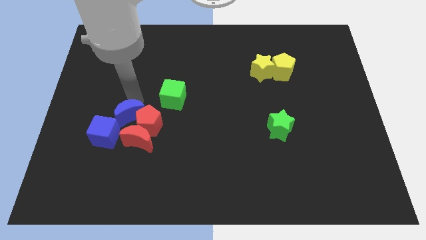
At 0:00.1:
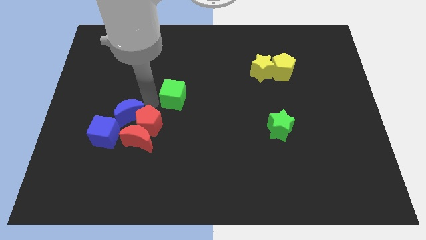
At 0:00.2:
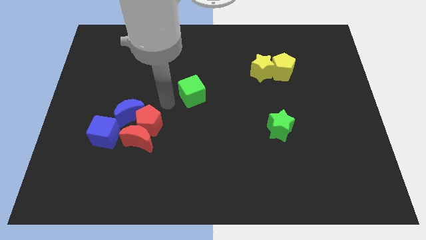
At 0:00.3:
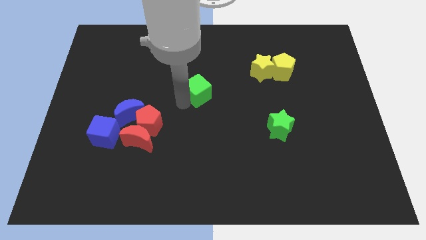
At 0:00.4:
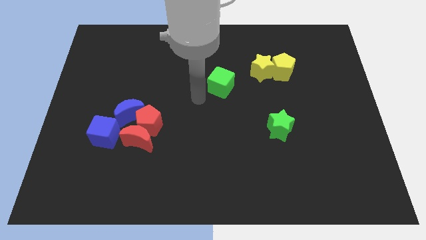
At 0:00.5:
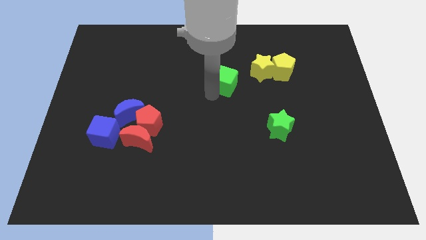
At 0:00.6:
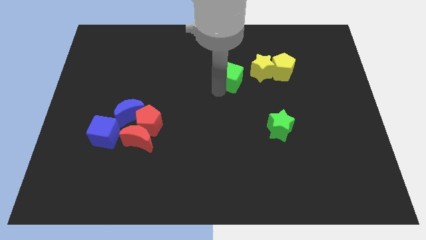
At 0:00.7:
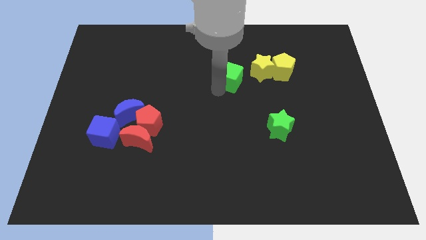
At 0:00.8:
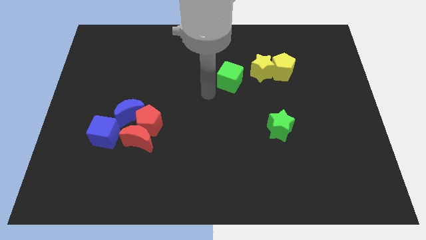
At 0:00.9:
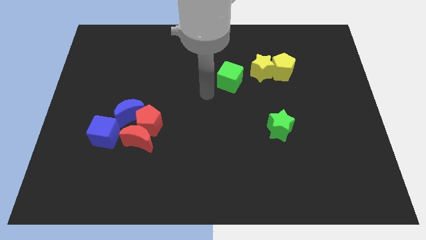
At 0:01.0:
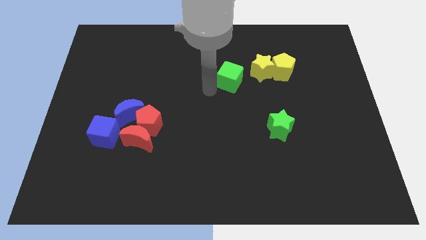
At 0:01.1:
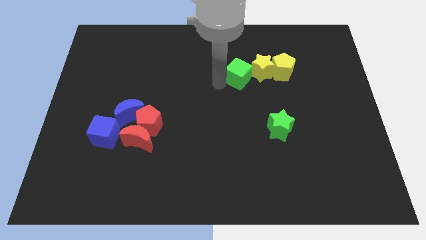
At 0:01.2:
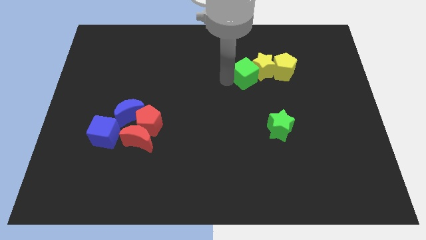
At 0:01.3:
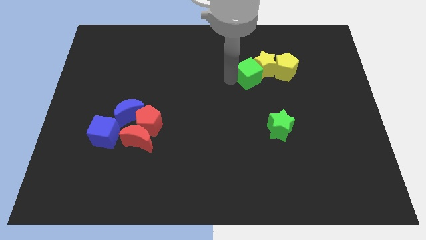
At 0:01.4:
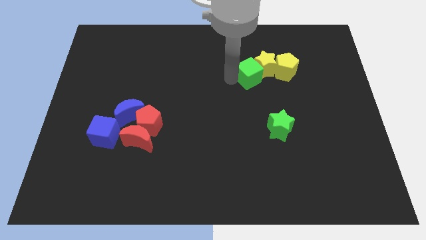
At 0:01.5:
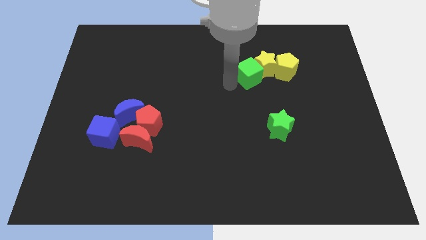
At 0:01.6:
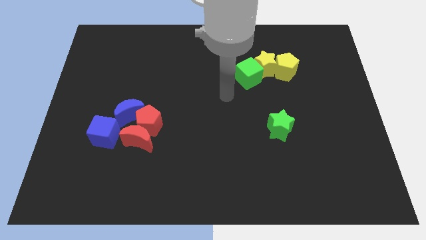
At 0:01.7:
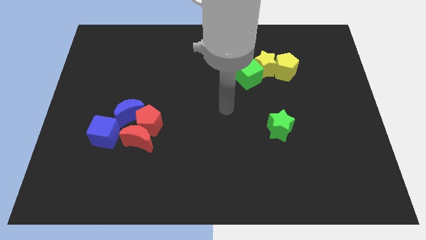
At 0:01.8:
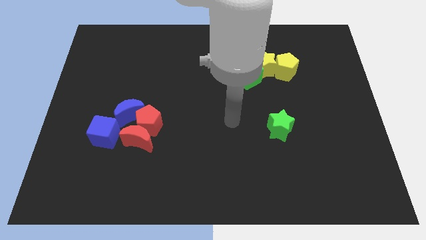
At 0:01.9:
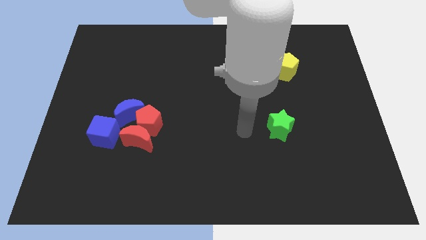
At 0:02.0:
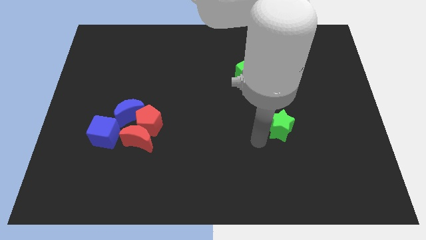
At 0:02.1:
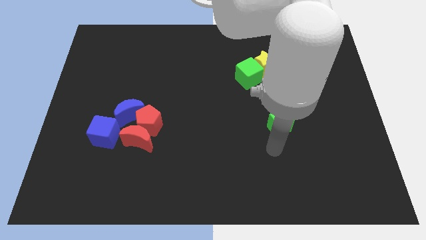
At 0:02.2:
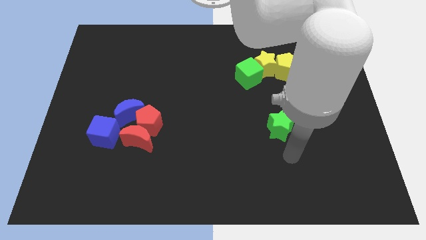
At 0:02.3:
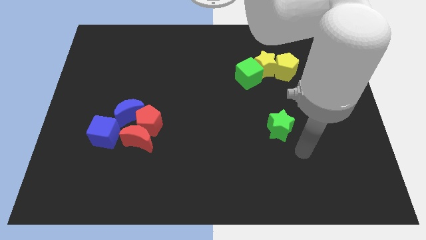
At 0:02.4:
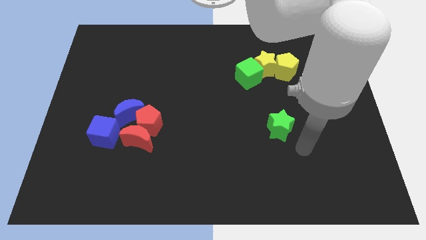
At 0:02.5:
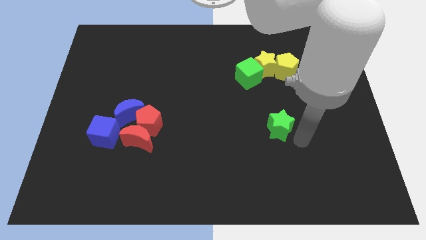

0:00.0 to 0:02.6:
push the green cube into the yellow star

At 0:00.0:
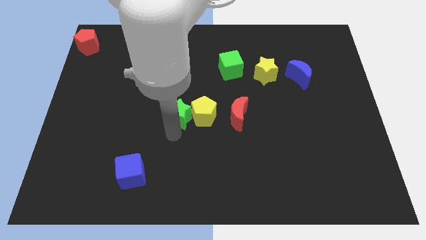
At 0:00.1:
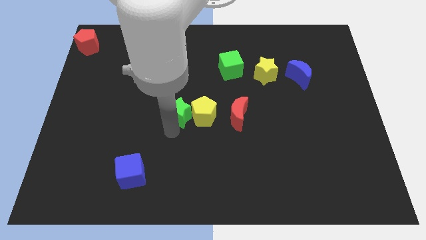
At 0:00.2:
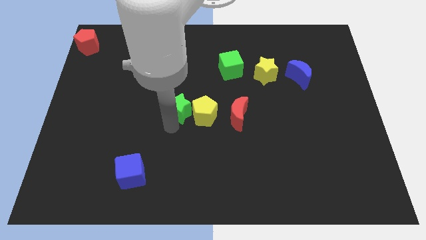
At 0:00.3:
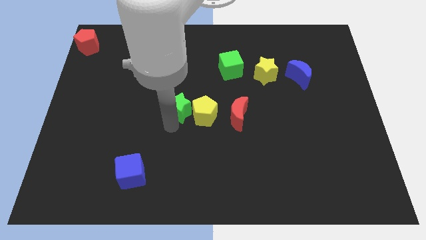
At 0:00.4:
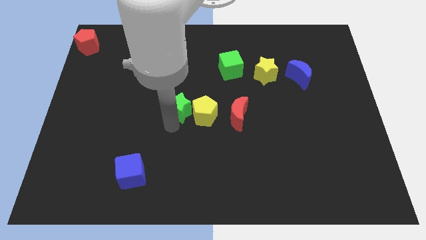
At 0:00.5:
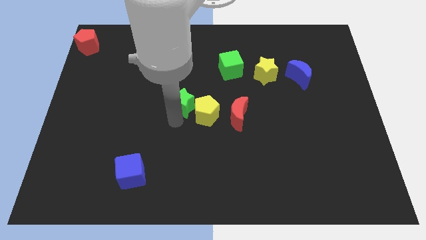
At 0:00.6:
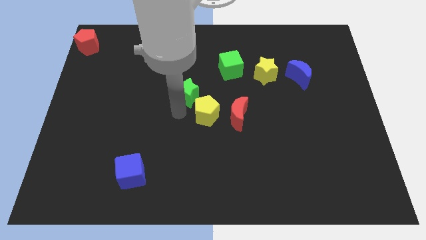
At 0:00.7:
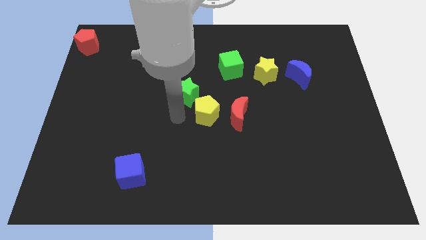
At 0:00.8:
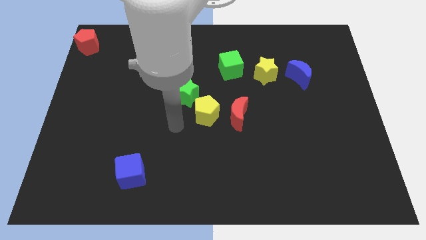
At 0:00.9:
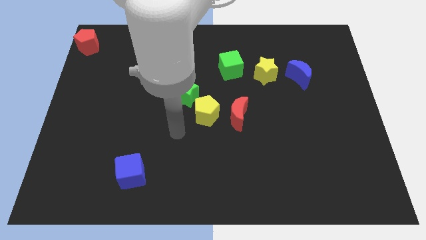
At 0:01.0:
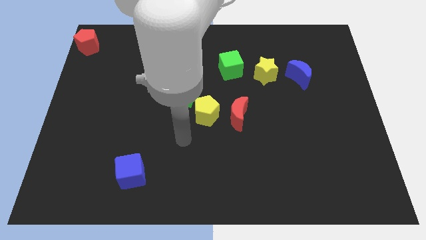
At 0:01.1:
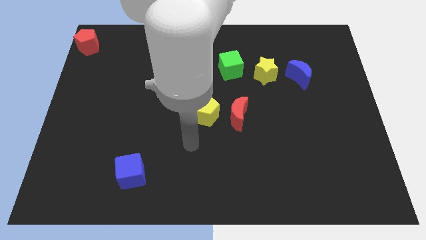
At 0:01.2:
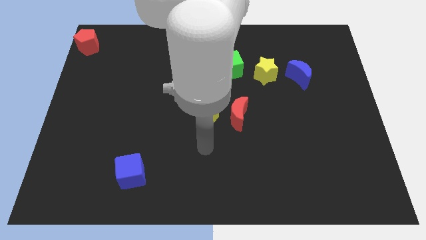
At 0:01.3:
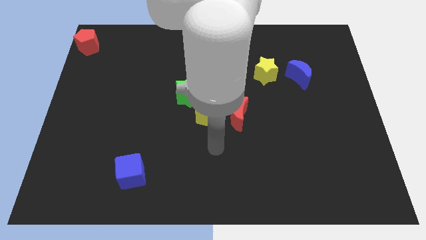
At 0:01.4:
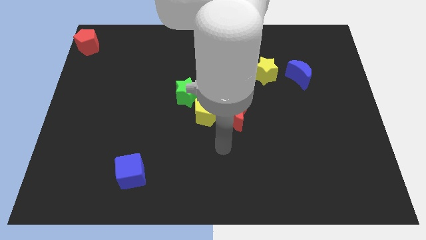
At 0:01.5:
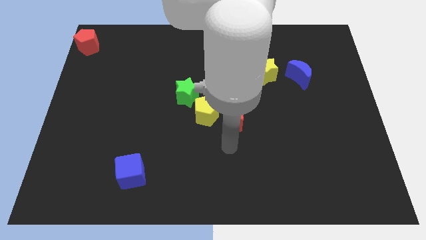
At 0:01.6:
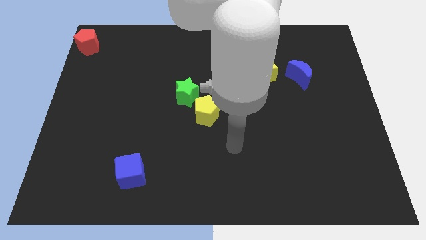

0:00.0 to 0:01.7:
push the green star slightly to the top

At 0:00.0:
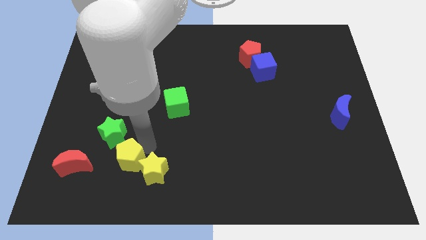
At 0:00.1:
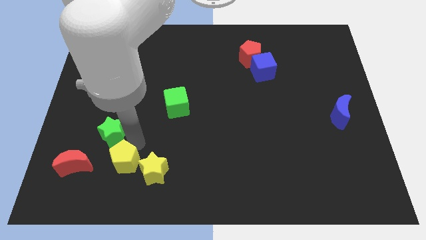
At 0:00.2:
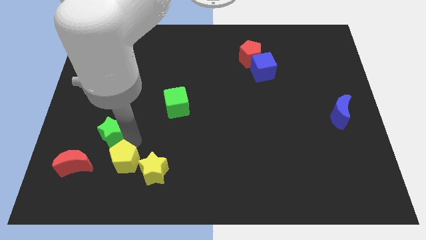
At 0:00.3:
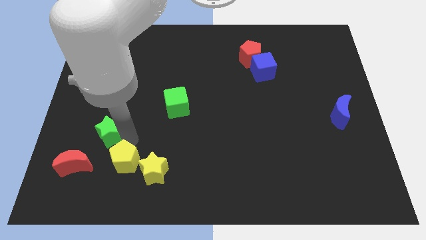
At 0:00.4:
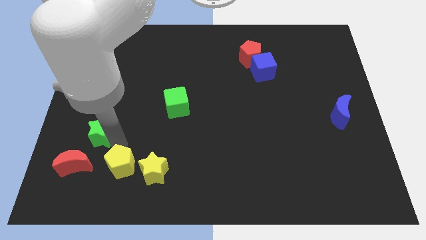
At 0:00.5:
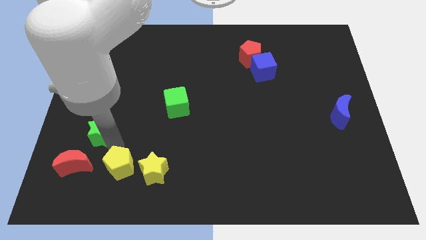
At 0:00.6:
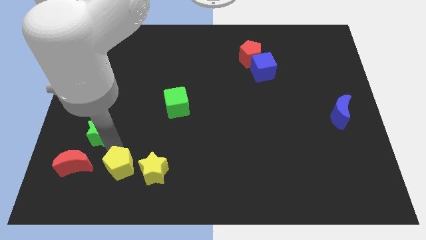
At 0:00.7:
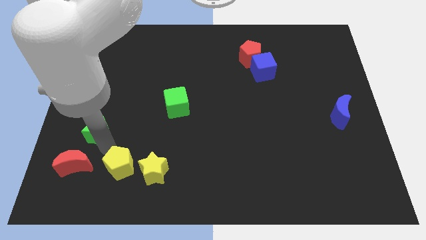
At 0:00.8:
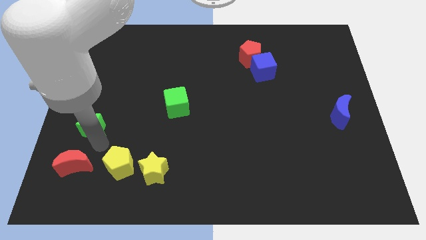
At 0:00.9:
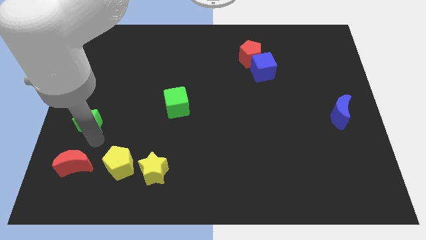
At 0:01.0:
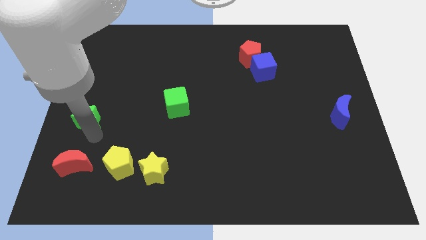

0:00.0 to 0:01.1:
place the green star above the red moon

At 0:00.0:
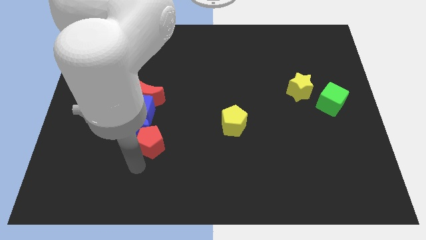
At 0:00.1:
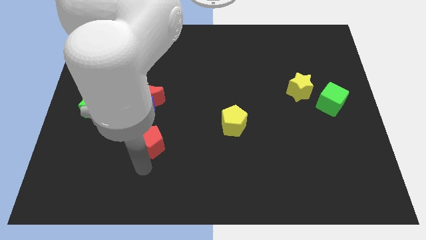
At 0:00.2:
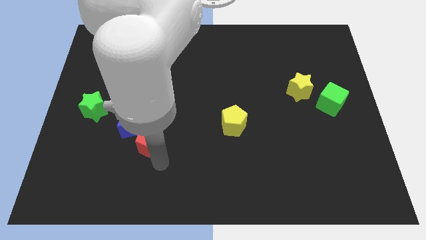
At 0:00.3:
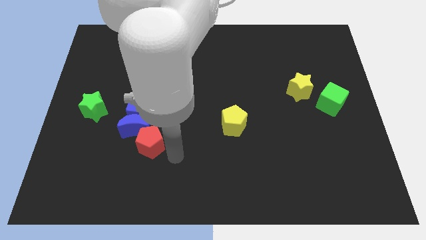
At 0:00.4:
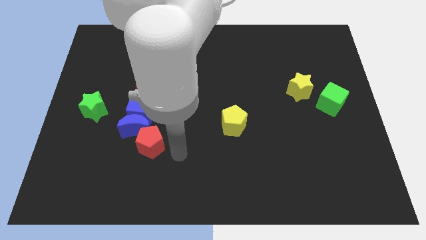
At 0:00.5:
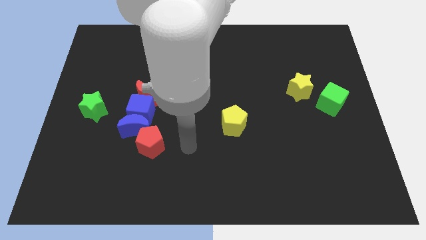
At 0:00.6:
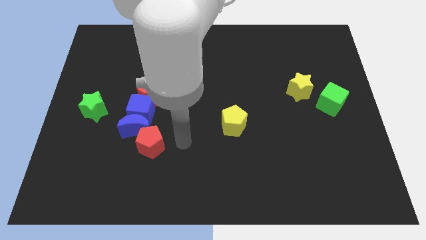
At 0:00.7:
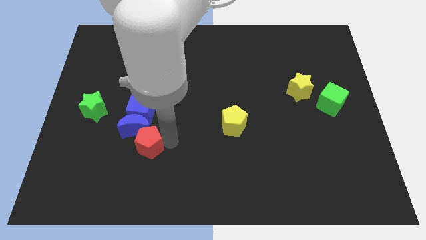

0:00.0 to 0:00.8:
move your arm to the right of the red pentagon

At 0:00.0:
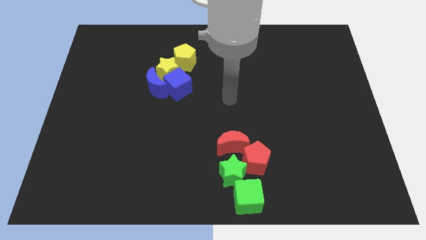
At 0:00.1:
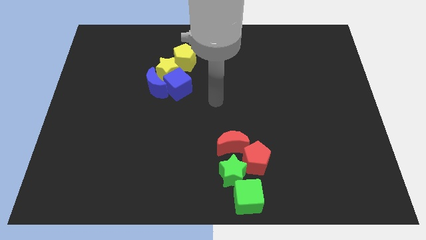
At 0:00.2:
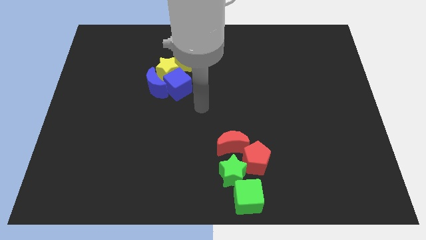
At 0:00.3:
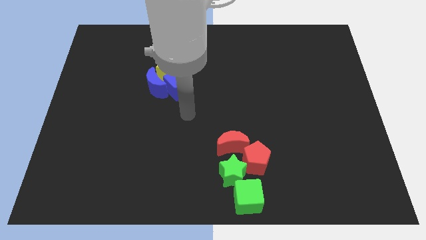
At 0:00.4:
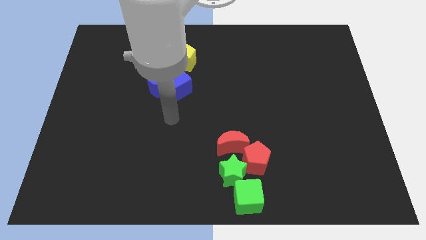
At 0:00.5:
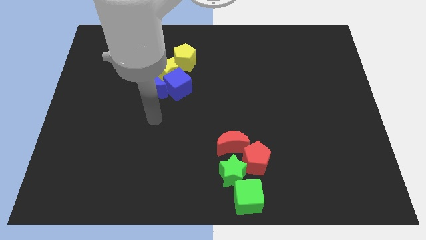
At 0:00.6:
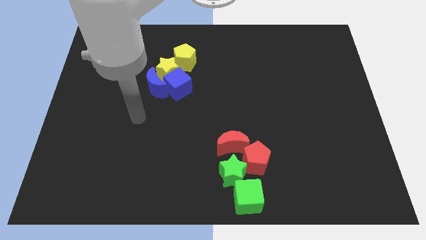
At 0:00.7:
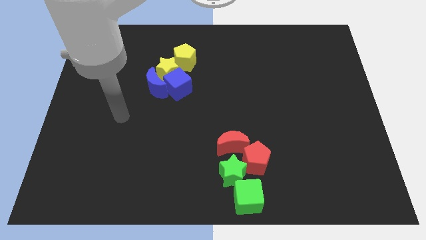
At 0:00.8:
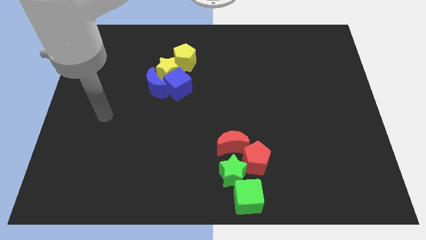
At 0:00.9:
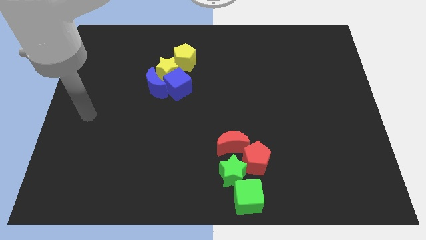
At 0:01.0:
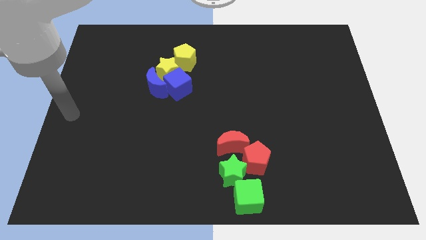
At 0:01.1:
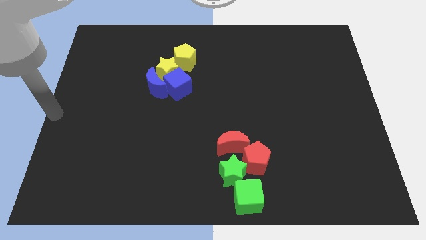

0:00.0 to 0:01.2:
place your hand at left center of the board

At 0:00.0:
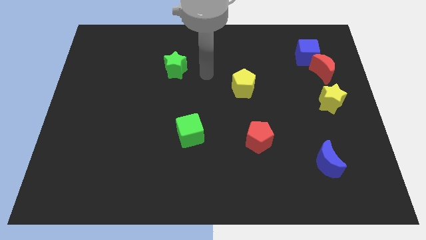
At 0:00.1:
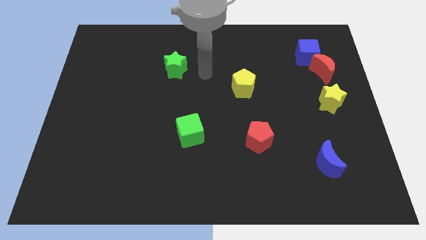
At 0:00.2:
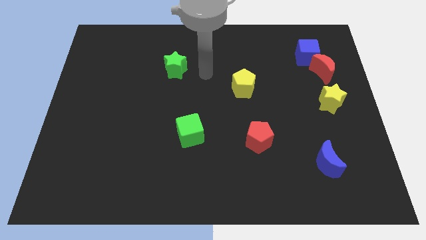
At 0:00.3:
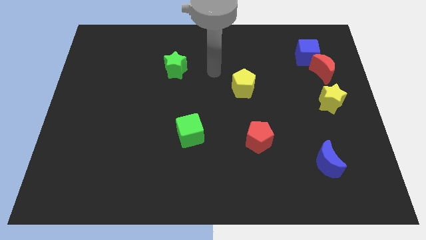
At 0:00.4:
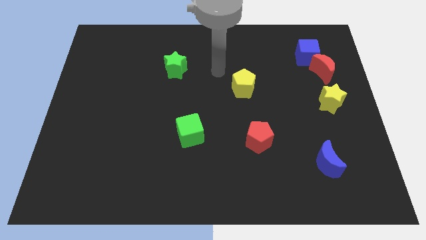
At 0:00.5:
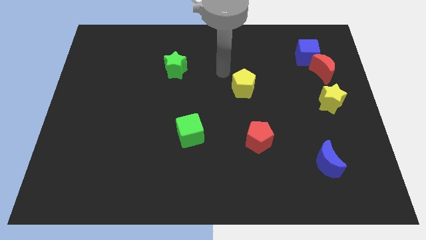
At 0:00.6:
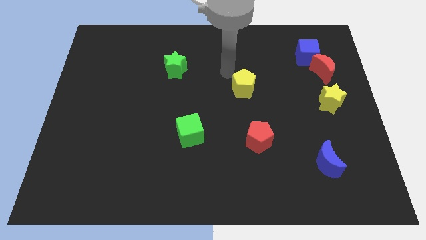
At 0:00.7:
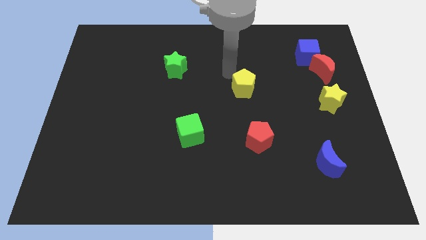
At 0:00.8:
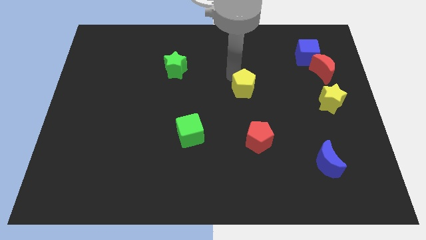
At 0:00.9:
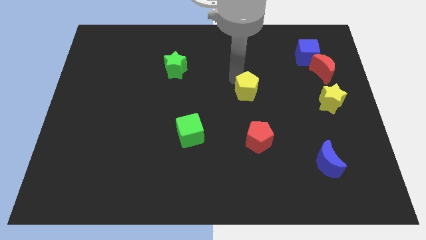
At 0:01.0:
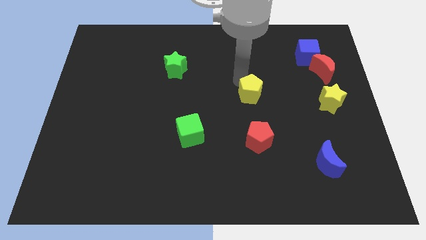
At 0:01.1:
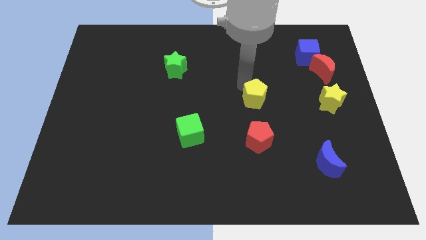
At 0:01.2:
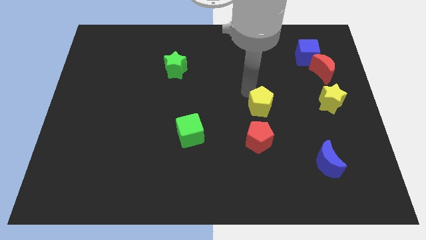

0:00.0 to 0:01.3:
move the yellow pentagon above the red pentagon

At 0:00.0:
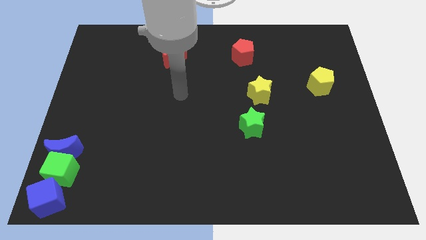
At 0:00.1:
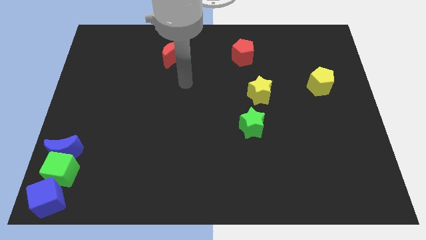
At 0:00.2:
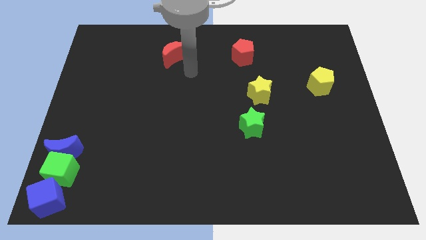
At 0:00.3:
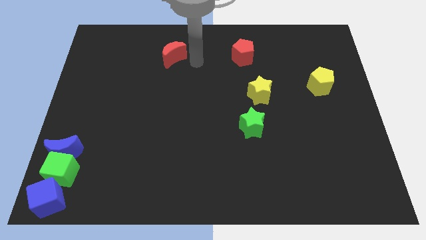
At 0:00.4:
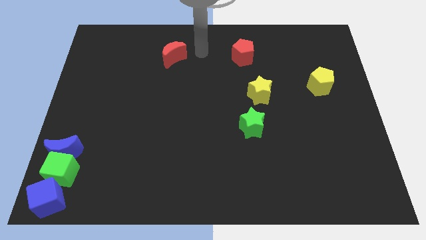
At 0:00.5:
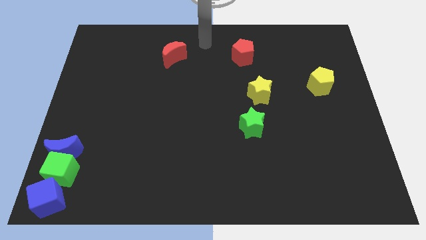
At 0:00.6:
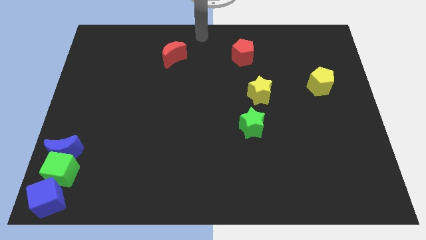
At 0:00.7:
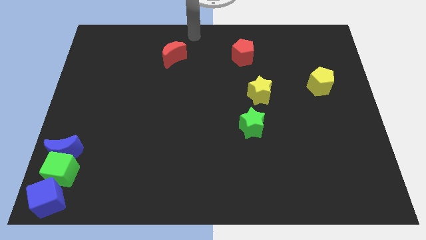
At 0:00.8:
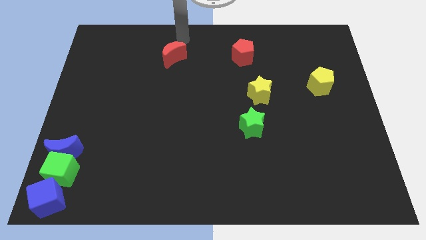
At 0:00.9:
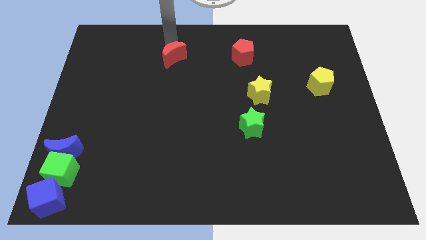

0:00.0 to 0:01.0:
point your arm at the top of red moon
